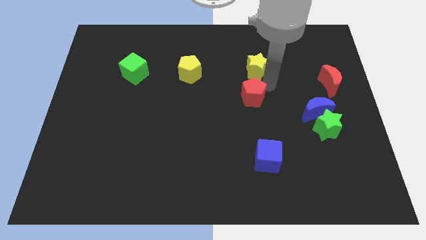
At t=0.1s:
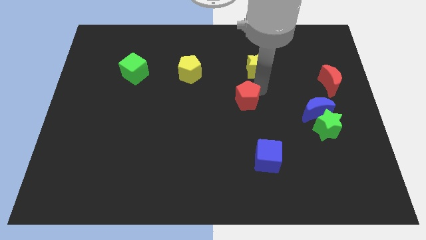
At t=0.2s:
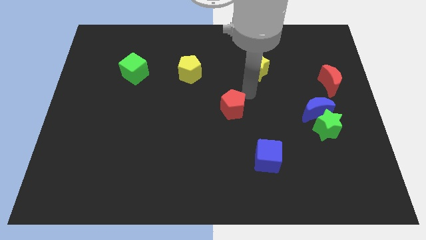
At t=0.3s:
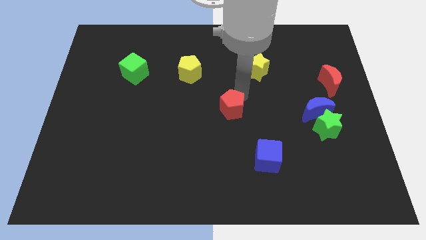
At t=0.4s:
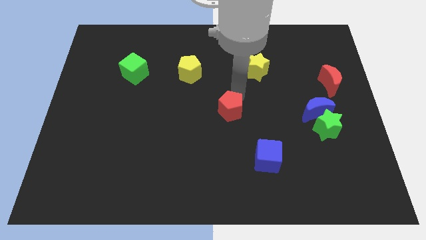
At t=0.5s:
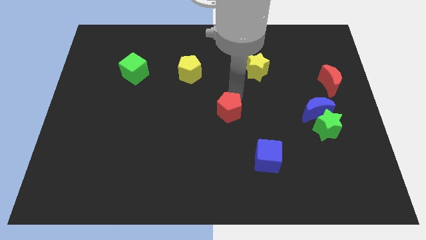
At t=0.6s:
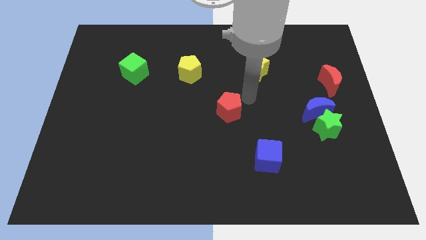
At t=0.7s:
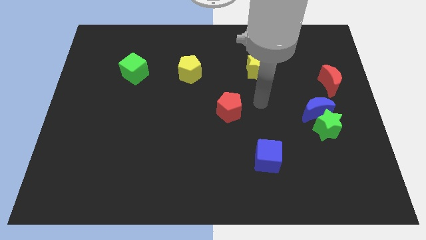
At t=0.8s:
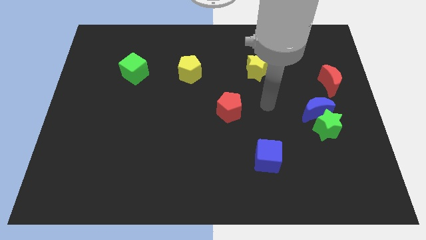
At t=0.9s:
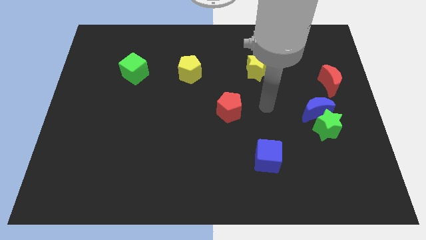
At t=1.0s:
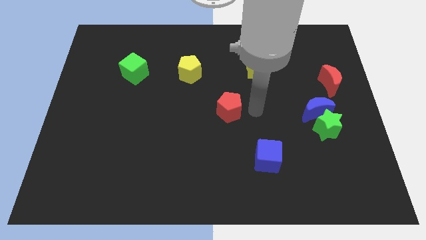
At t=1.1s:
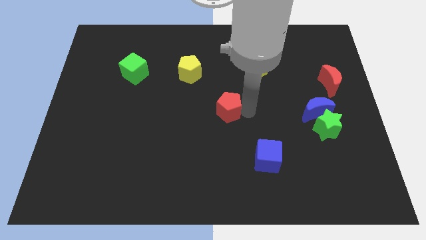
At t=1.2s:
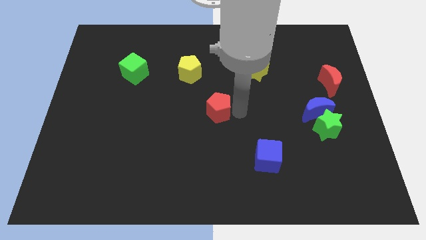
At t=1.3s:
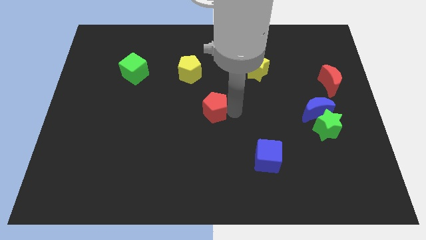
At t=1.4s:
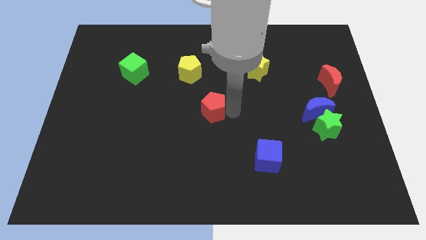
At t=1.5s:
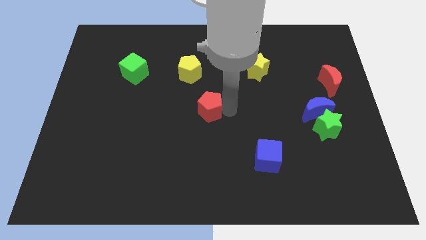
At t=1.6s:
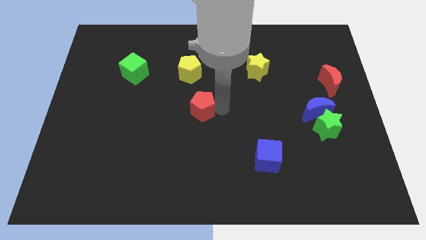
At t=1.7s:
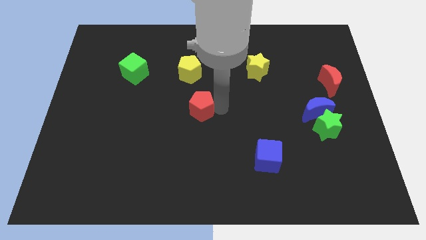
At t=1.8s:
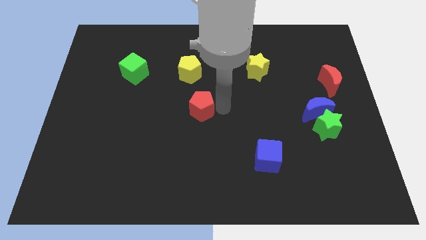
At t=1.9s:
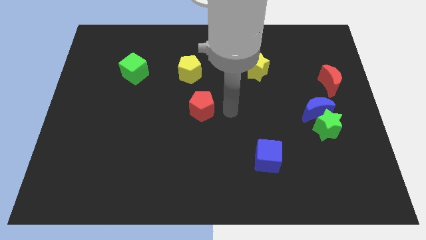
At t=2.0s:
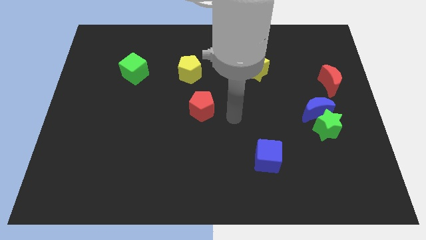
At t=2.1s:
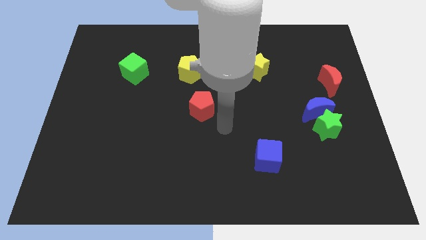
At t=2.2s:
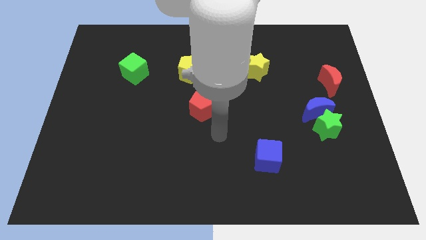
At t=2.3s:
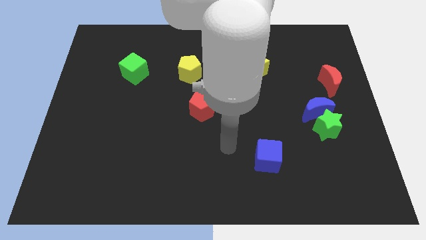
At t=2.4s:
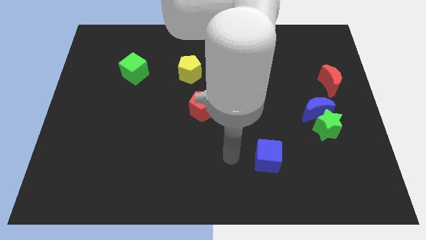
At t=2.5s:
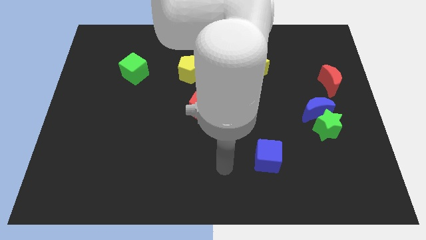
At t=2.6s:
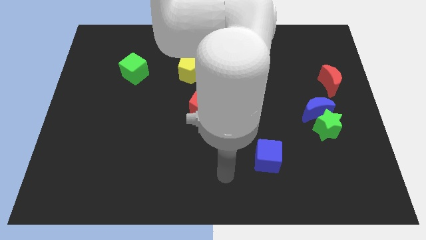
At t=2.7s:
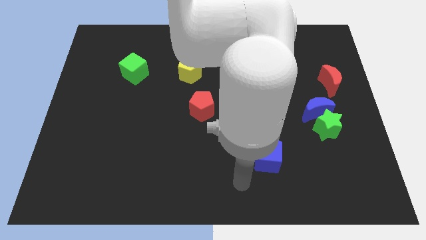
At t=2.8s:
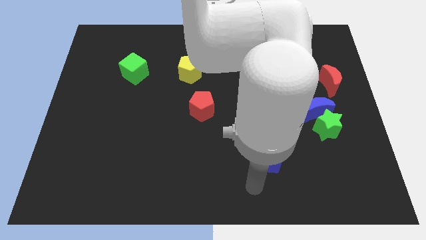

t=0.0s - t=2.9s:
move the red pentagon close the yellow pentagon

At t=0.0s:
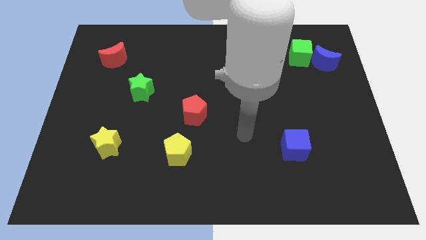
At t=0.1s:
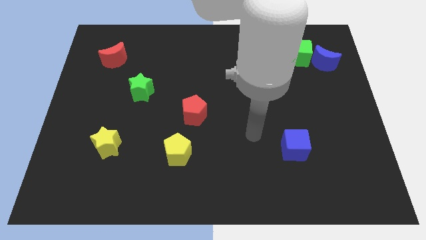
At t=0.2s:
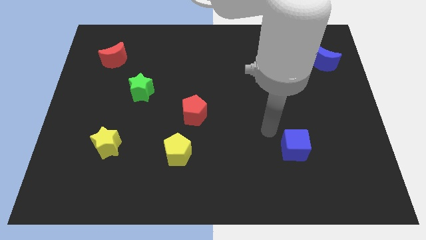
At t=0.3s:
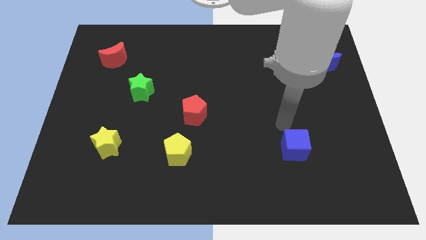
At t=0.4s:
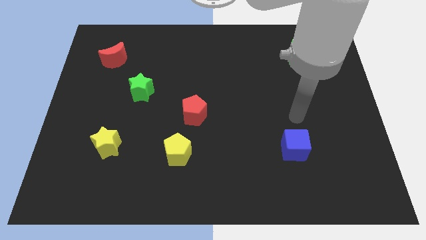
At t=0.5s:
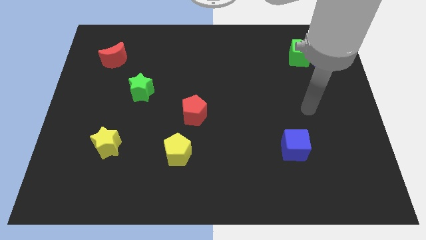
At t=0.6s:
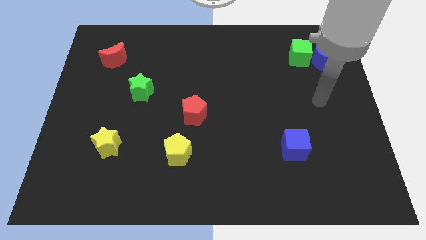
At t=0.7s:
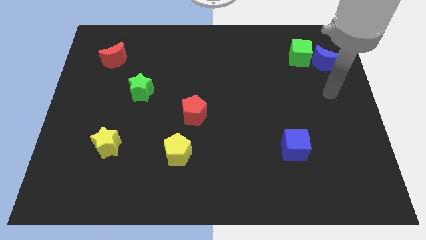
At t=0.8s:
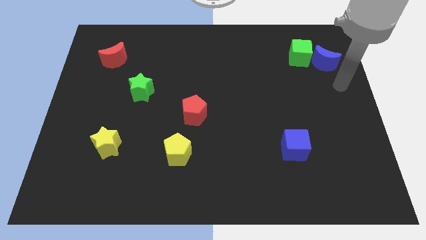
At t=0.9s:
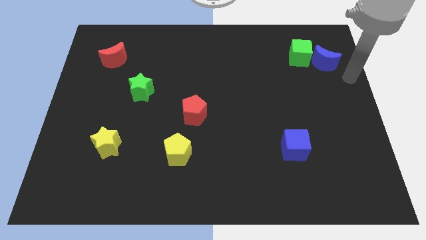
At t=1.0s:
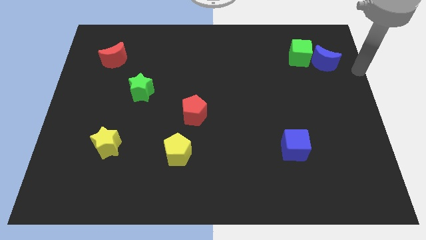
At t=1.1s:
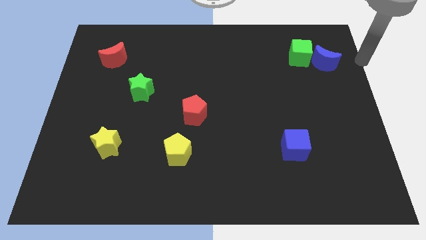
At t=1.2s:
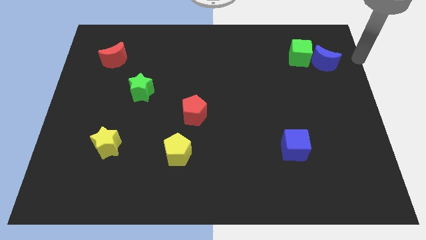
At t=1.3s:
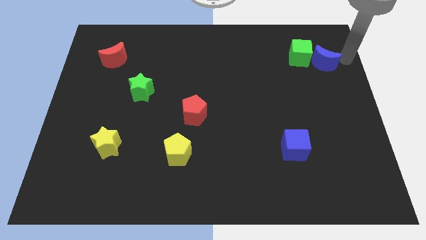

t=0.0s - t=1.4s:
move your arm to the right of the blue crescent

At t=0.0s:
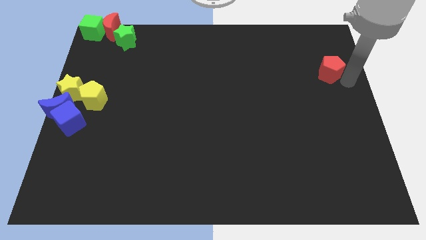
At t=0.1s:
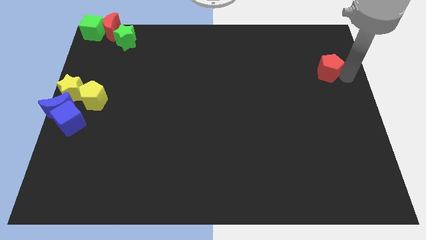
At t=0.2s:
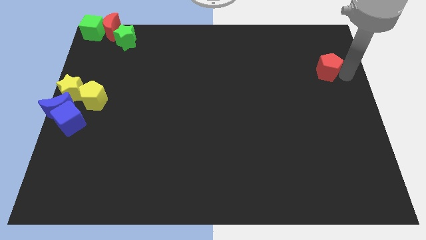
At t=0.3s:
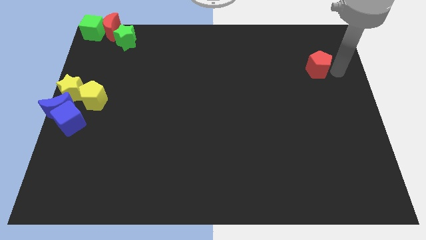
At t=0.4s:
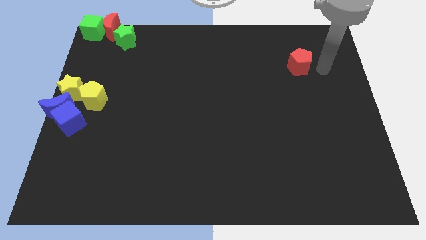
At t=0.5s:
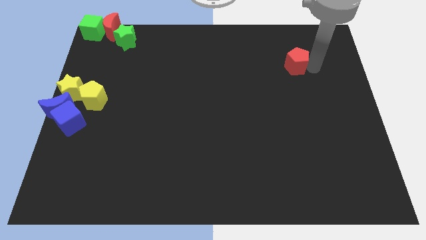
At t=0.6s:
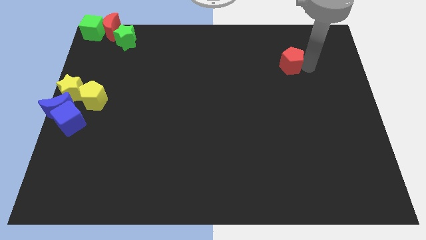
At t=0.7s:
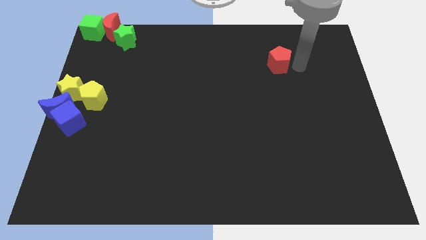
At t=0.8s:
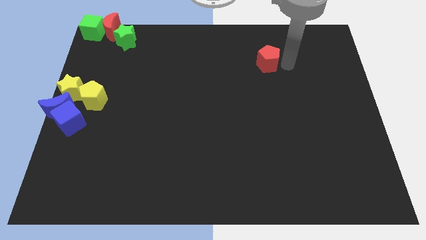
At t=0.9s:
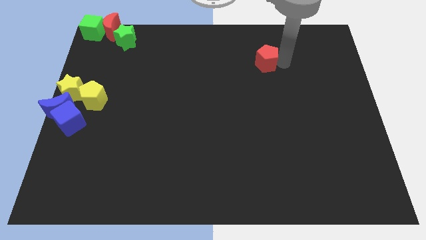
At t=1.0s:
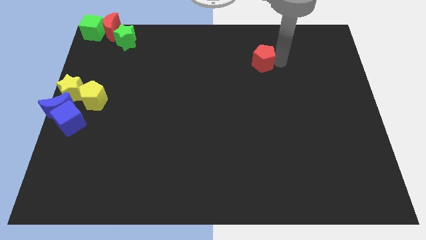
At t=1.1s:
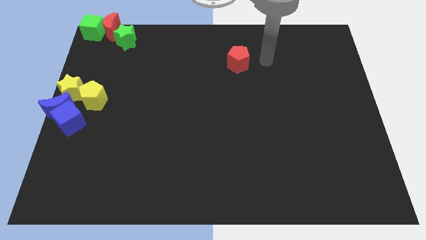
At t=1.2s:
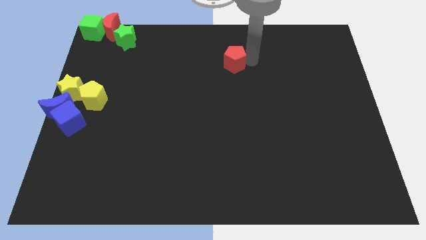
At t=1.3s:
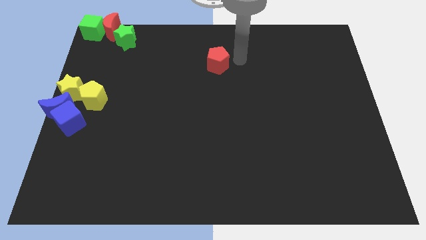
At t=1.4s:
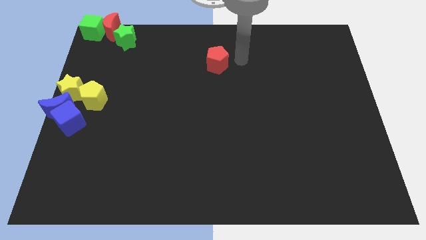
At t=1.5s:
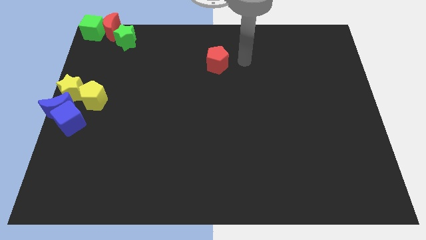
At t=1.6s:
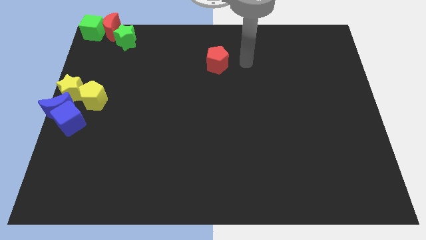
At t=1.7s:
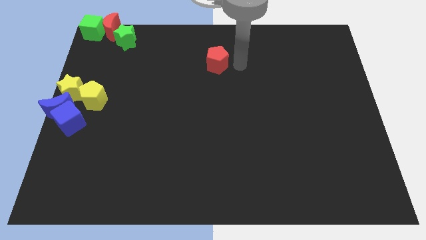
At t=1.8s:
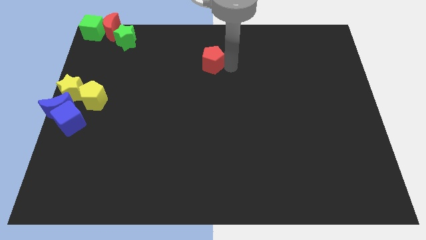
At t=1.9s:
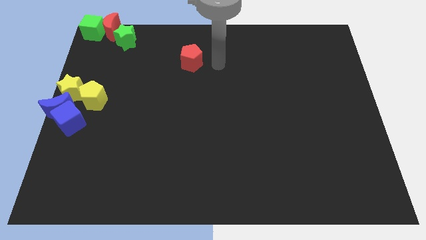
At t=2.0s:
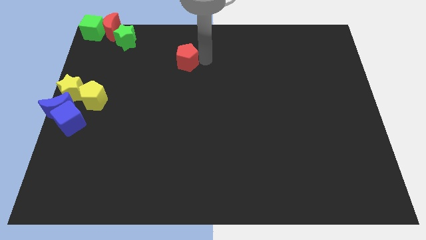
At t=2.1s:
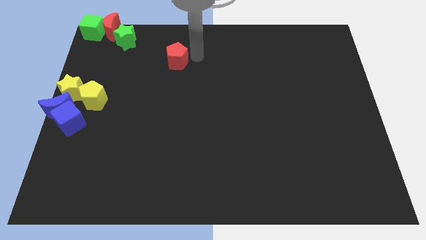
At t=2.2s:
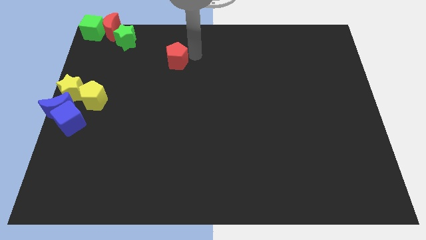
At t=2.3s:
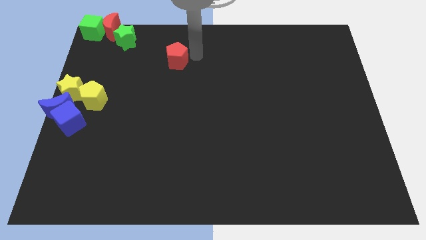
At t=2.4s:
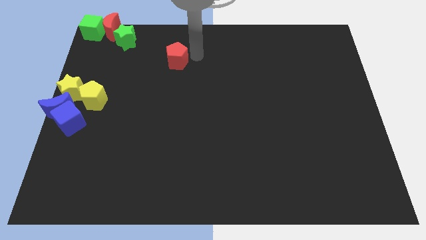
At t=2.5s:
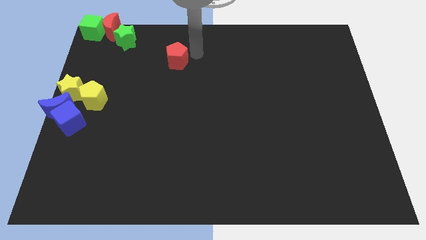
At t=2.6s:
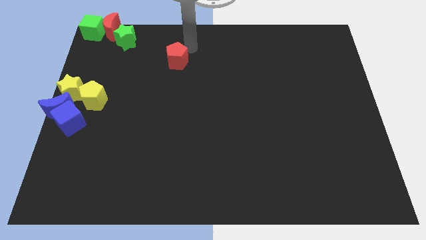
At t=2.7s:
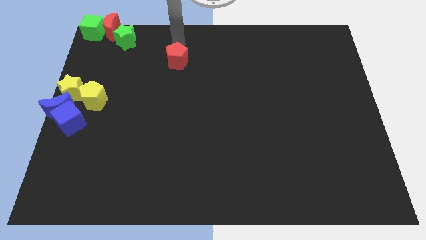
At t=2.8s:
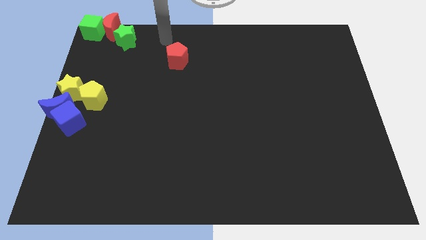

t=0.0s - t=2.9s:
move the red pentagon toward the top left corner blocks

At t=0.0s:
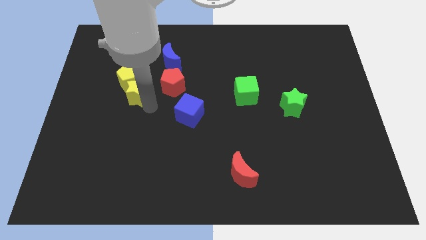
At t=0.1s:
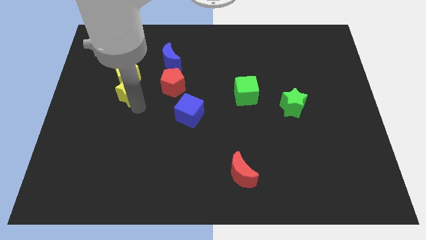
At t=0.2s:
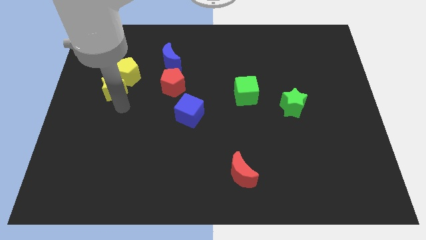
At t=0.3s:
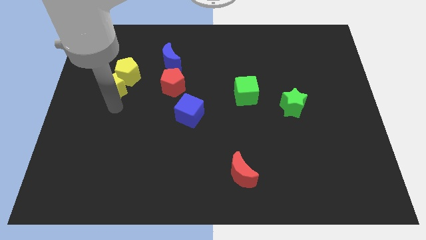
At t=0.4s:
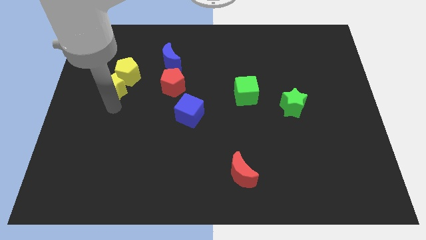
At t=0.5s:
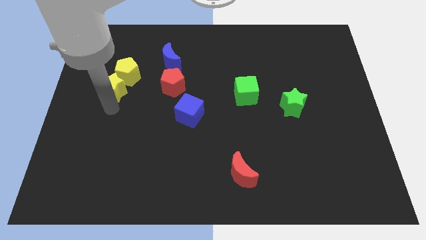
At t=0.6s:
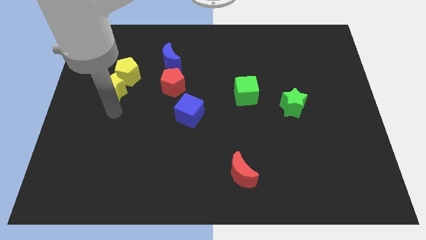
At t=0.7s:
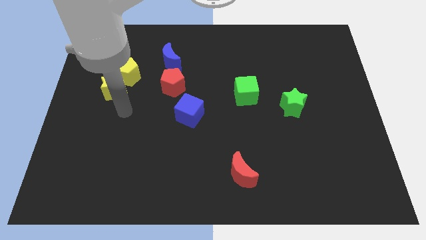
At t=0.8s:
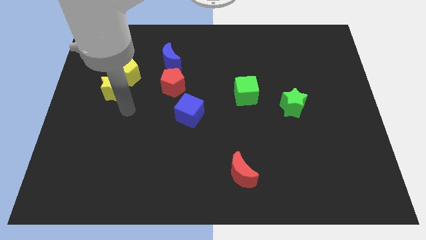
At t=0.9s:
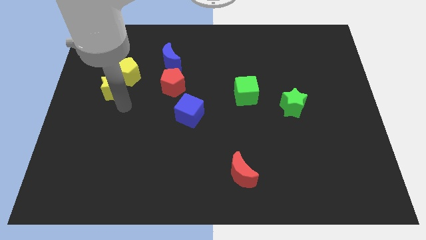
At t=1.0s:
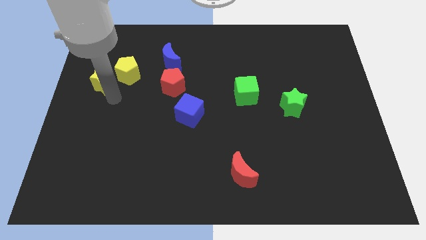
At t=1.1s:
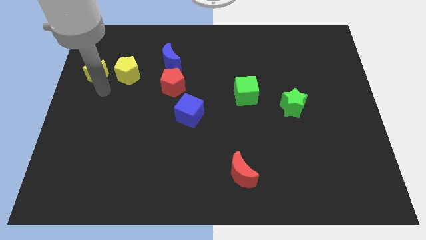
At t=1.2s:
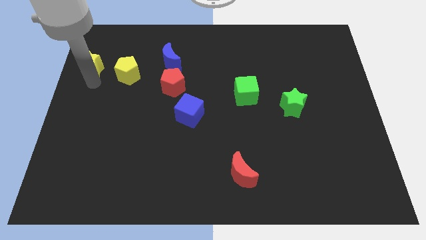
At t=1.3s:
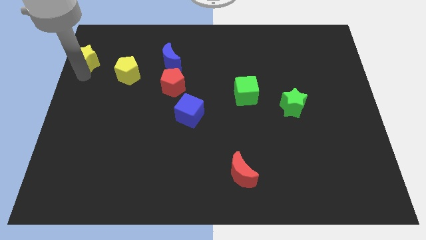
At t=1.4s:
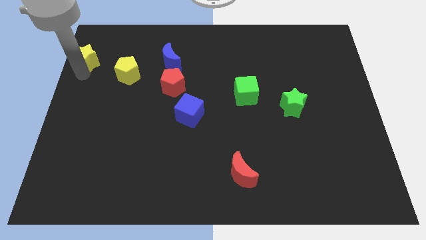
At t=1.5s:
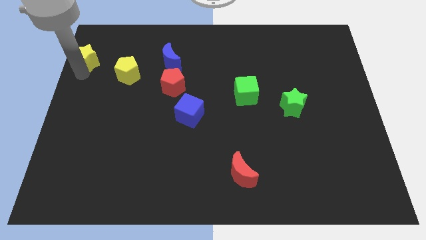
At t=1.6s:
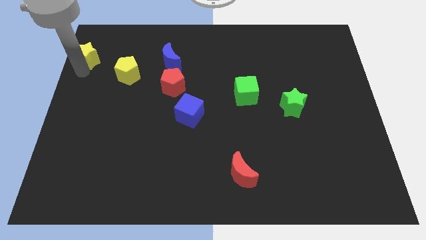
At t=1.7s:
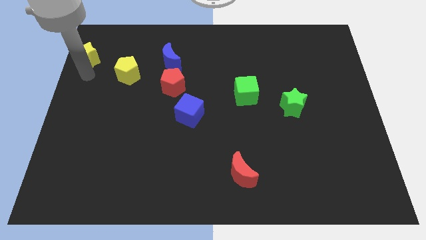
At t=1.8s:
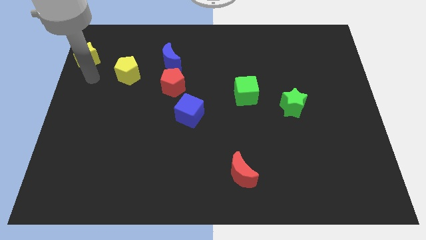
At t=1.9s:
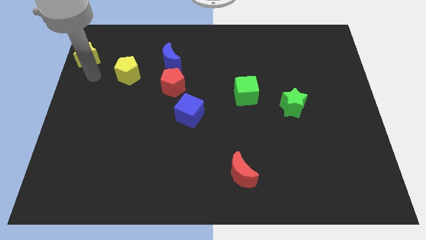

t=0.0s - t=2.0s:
place the yellow star to the left of the yellow pentagon
